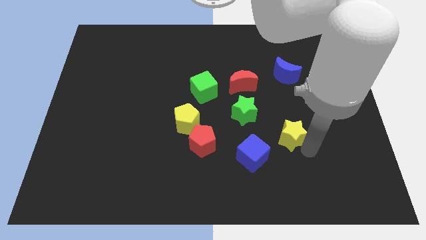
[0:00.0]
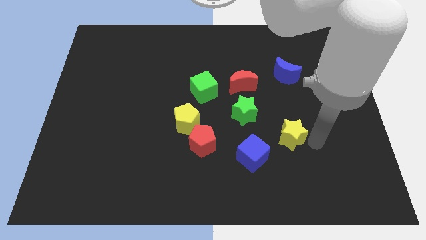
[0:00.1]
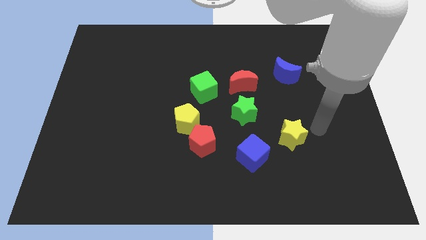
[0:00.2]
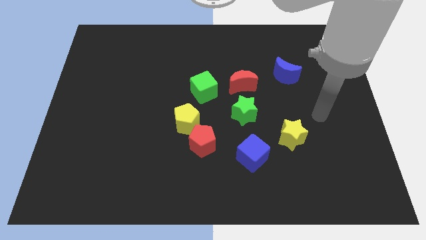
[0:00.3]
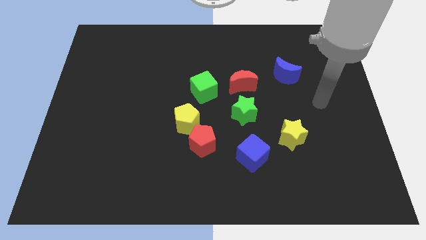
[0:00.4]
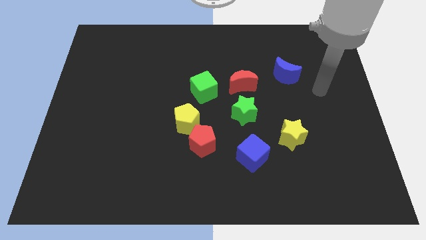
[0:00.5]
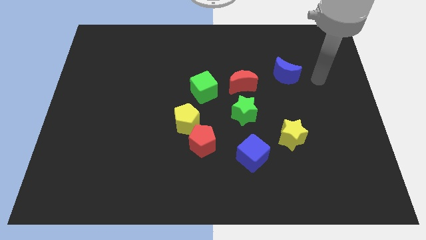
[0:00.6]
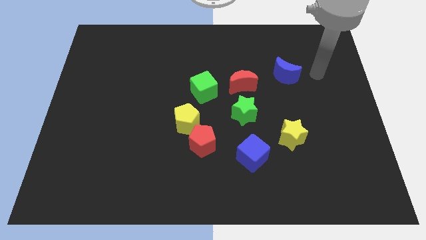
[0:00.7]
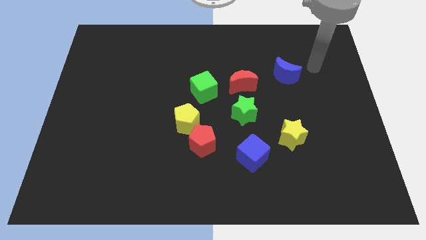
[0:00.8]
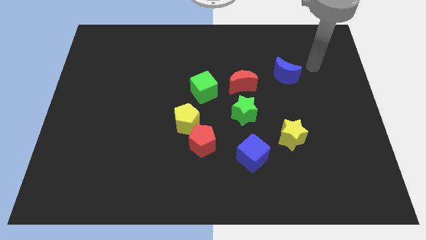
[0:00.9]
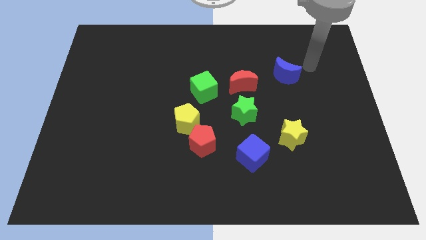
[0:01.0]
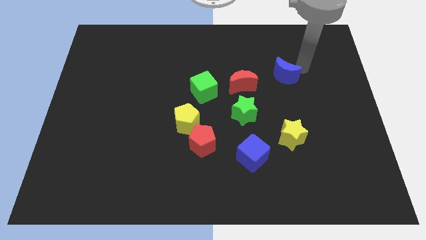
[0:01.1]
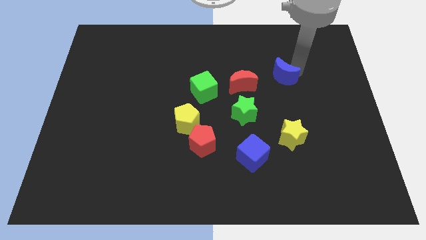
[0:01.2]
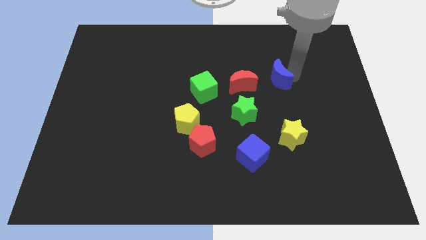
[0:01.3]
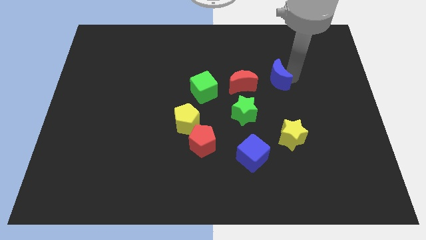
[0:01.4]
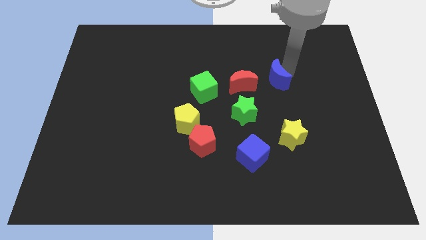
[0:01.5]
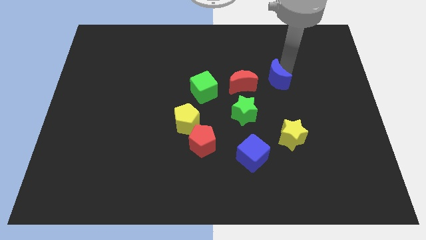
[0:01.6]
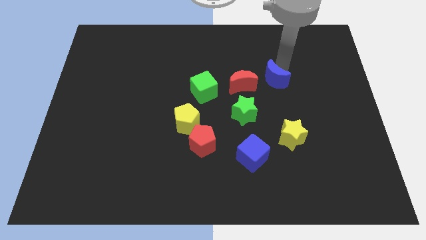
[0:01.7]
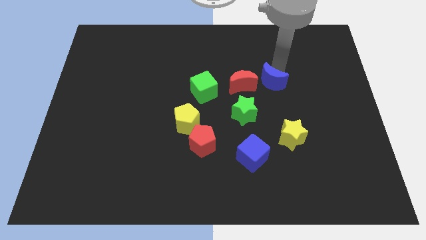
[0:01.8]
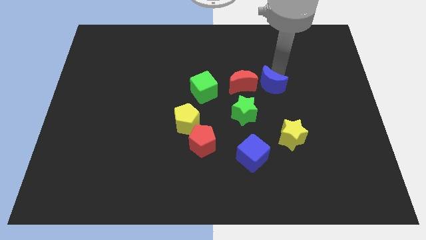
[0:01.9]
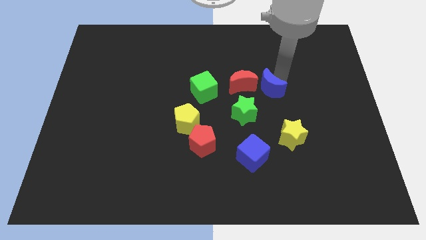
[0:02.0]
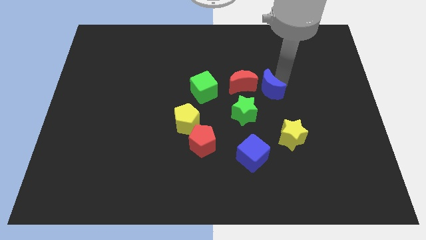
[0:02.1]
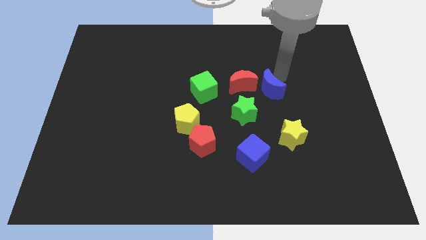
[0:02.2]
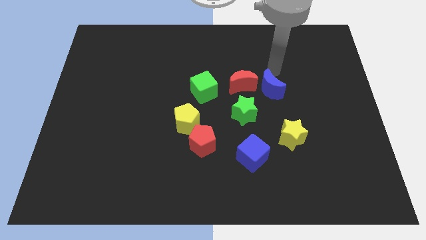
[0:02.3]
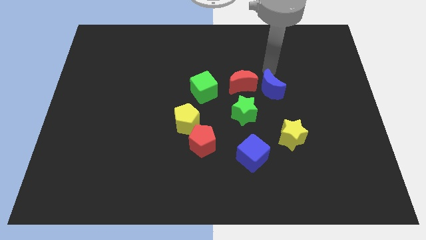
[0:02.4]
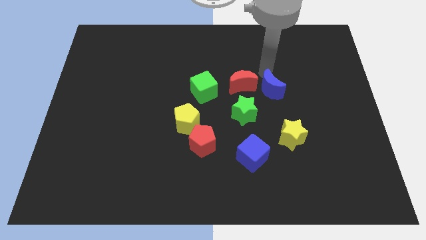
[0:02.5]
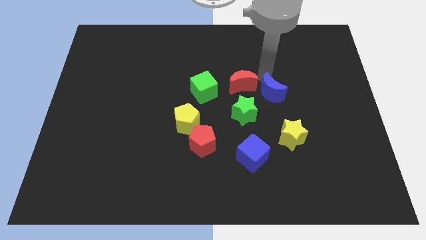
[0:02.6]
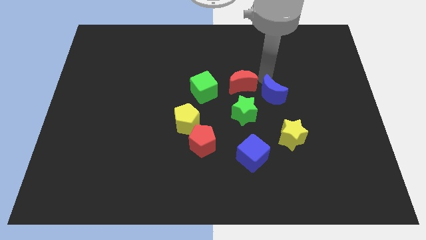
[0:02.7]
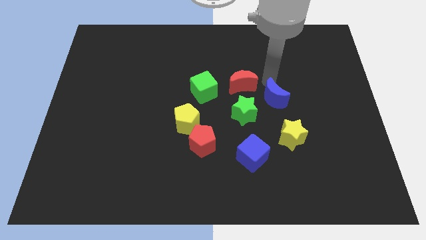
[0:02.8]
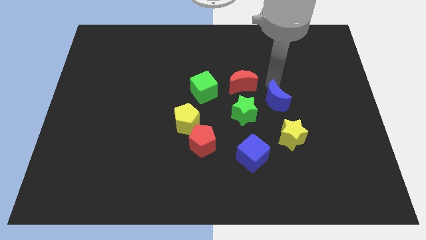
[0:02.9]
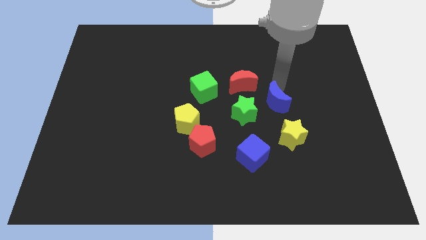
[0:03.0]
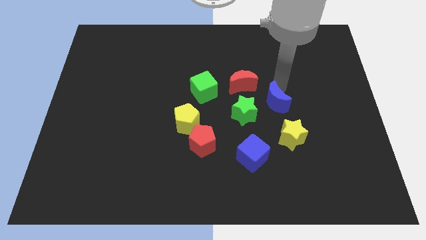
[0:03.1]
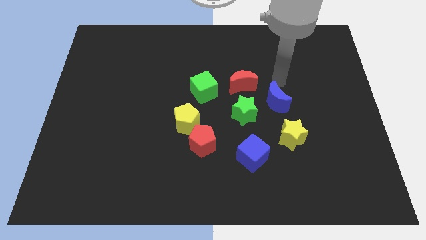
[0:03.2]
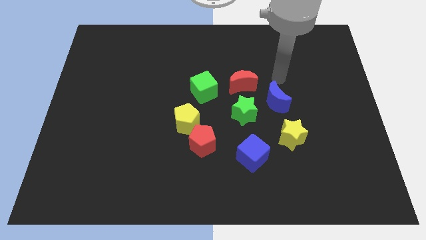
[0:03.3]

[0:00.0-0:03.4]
place the blue moon above the yellow star

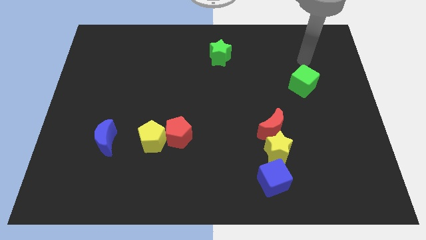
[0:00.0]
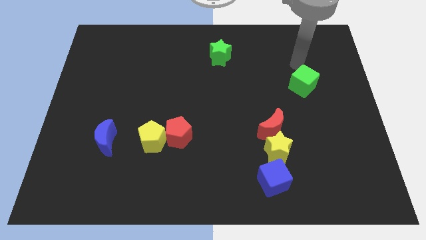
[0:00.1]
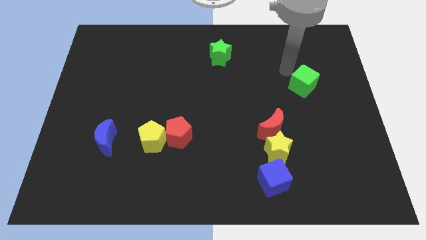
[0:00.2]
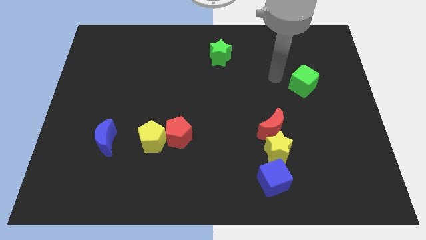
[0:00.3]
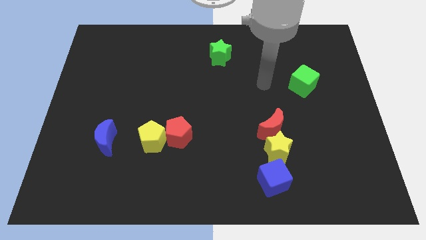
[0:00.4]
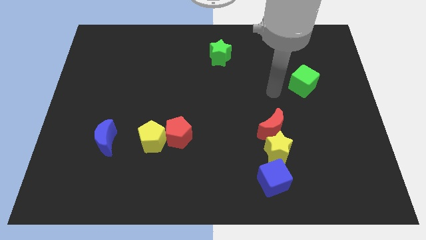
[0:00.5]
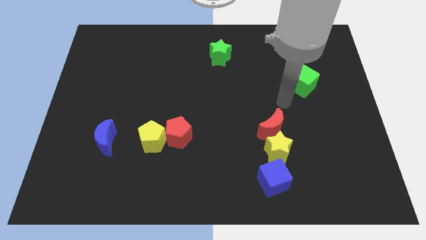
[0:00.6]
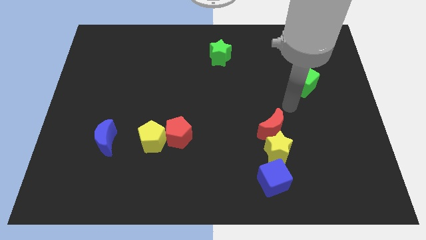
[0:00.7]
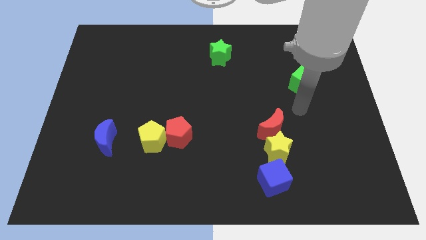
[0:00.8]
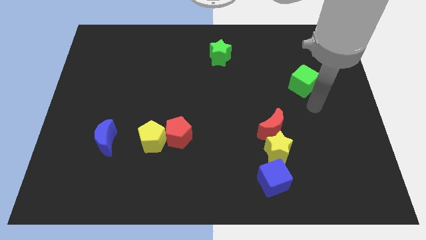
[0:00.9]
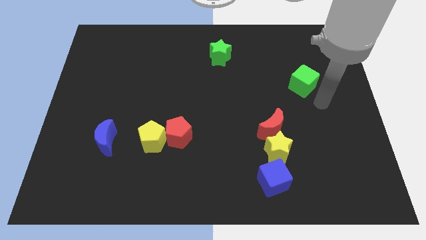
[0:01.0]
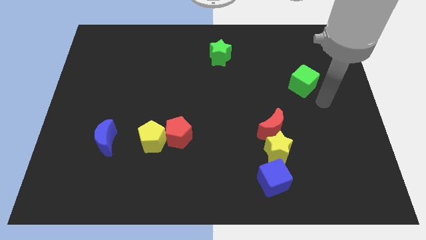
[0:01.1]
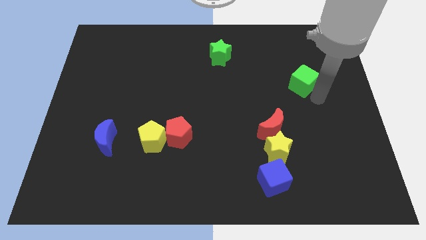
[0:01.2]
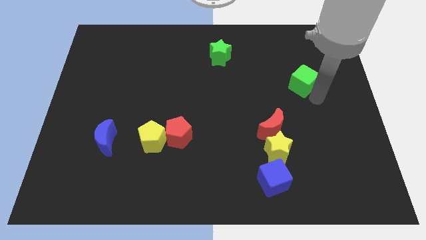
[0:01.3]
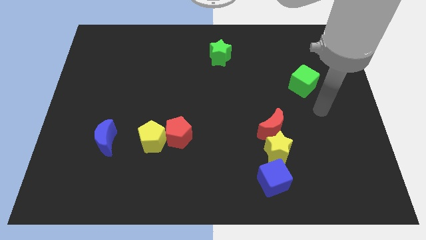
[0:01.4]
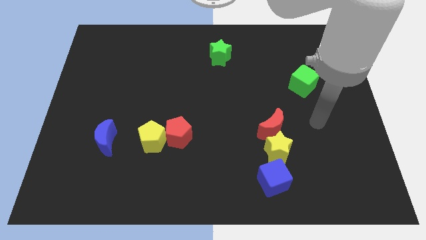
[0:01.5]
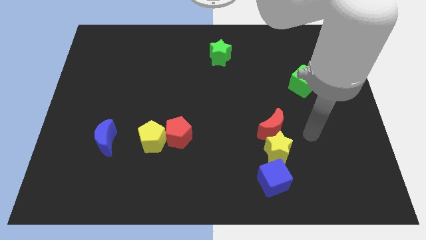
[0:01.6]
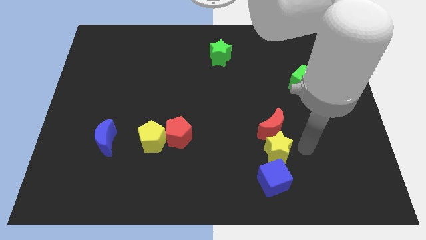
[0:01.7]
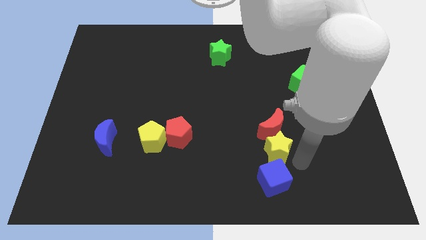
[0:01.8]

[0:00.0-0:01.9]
point your arm towards yellow star and blue cube

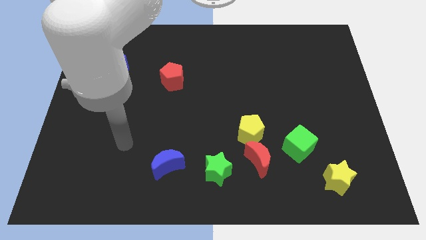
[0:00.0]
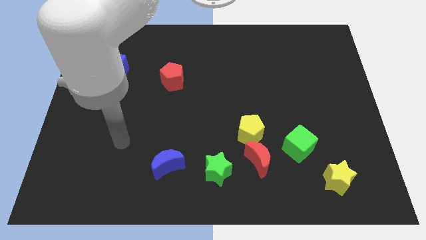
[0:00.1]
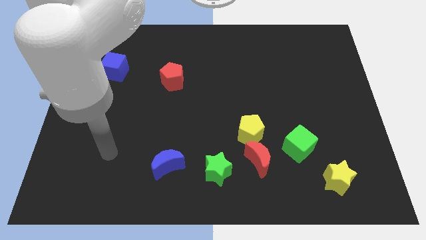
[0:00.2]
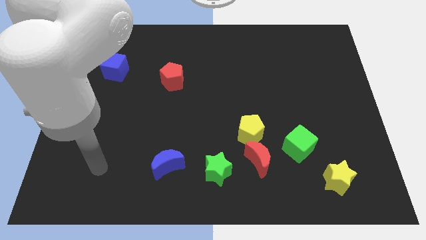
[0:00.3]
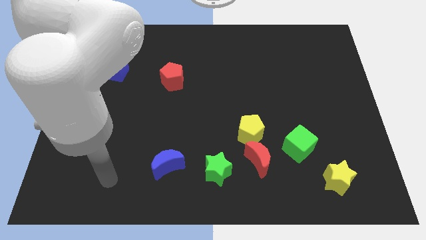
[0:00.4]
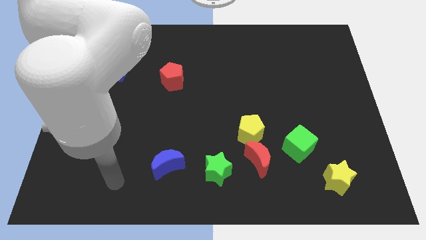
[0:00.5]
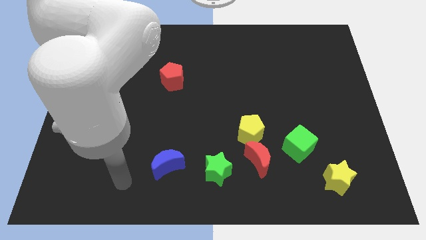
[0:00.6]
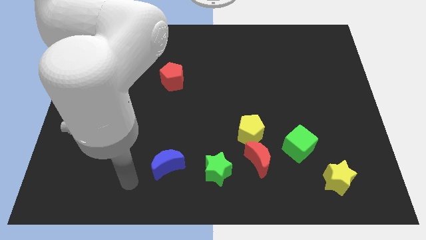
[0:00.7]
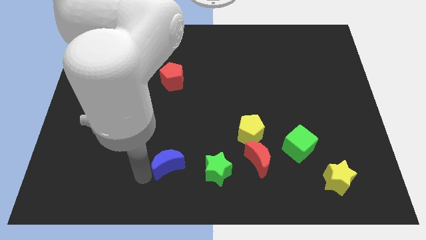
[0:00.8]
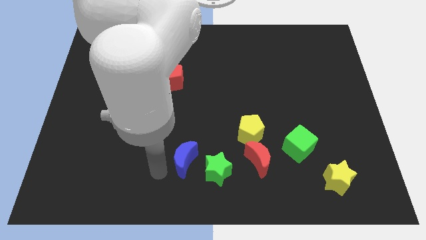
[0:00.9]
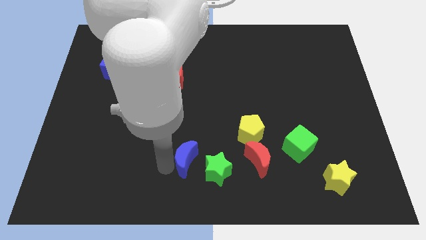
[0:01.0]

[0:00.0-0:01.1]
move your arm towards blue crescent

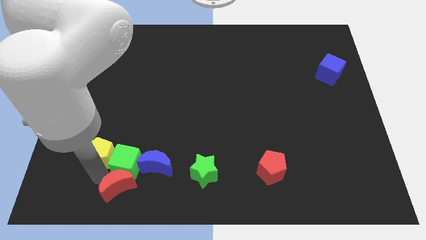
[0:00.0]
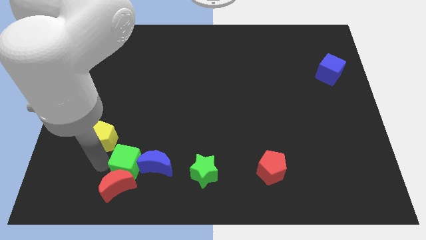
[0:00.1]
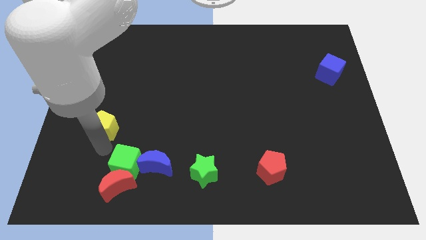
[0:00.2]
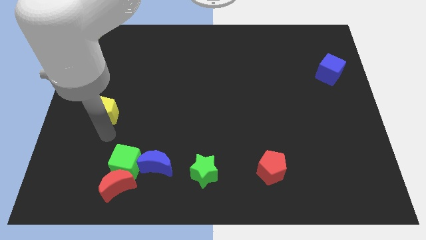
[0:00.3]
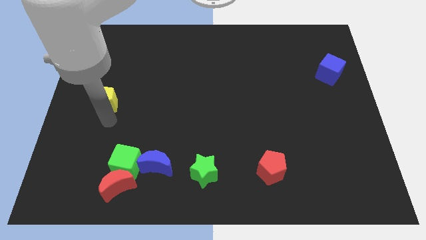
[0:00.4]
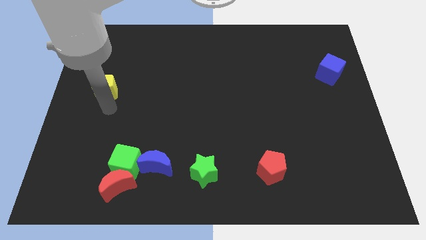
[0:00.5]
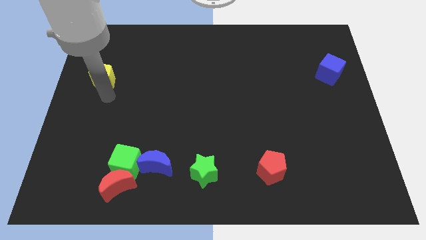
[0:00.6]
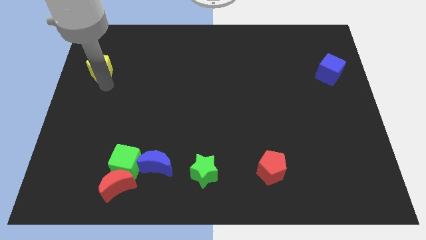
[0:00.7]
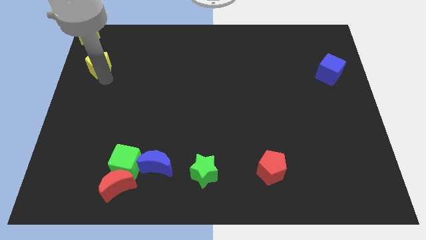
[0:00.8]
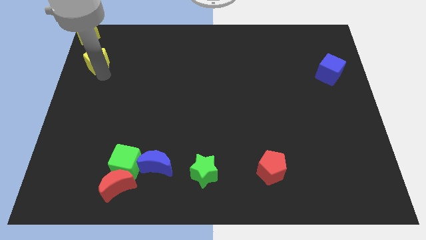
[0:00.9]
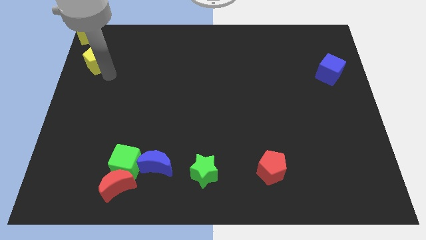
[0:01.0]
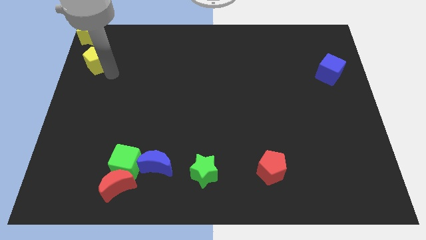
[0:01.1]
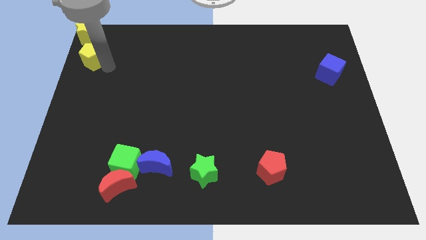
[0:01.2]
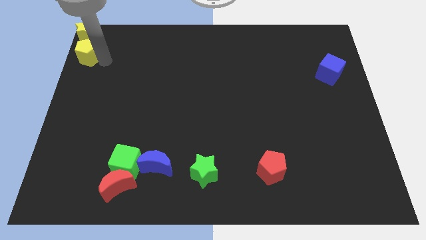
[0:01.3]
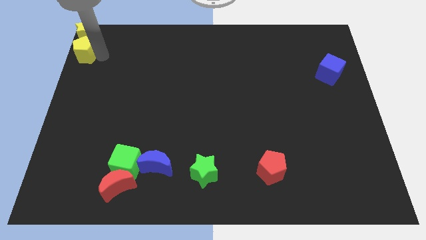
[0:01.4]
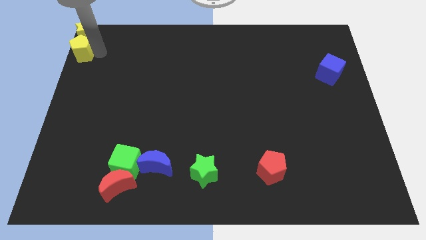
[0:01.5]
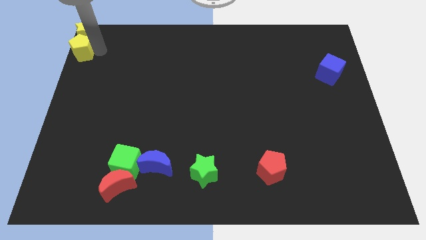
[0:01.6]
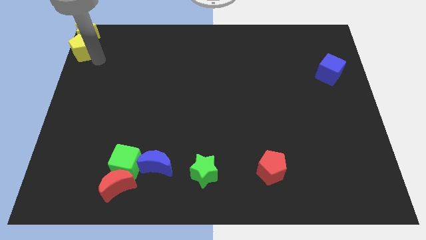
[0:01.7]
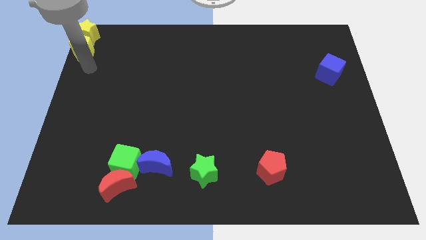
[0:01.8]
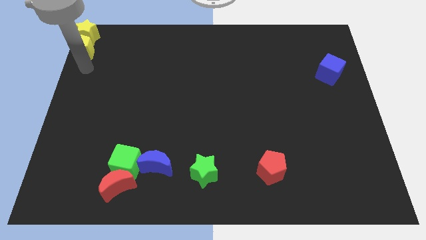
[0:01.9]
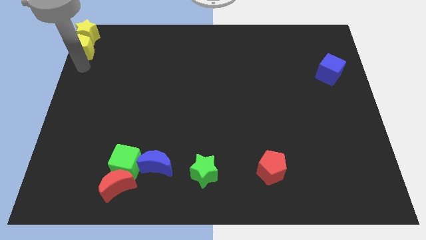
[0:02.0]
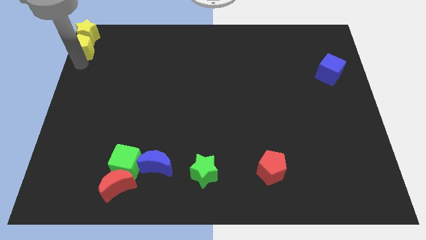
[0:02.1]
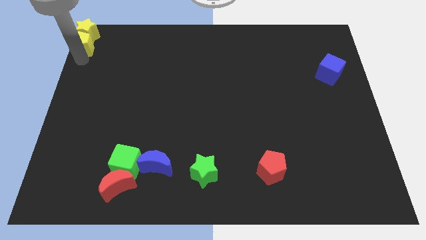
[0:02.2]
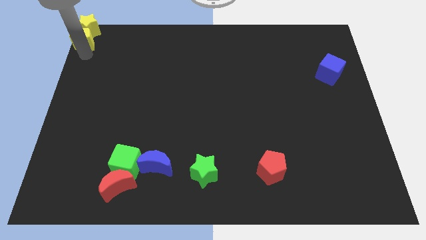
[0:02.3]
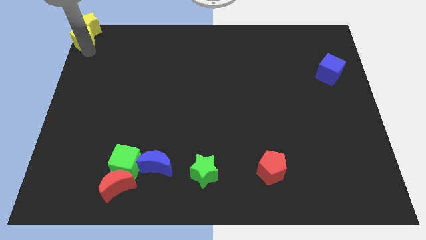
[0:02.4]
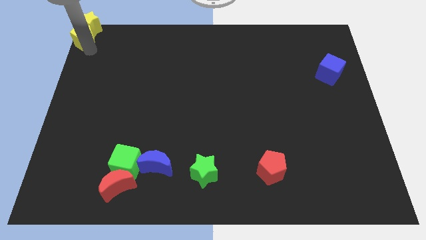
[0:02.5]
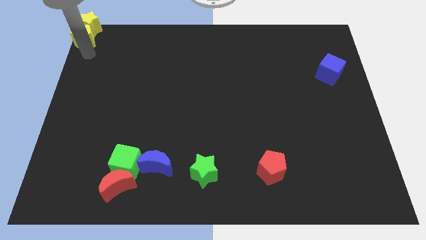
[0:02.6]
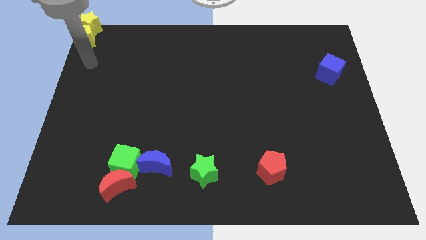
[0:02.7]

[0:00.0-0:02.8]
place yellow pentagon below yellow star
